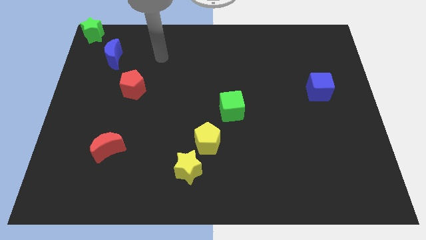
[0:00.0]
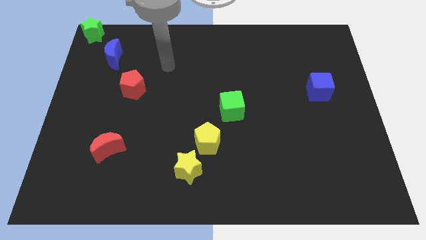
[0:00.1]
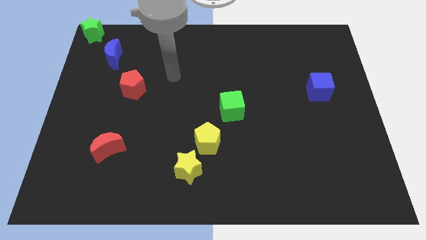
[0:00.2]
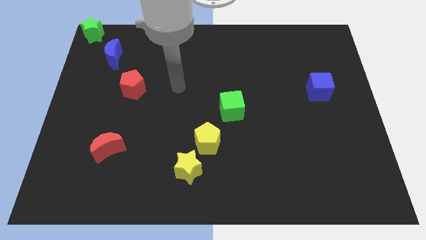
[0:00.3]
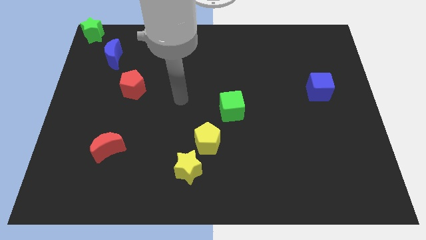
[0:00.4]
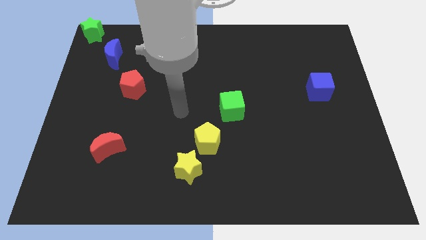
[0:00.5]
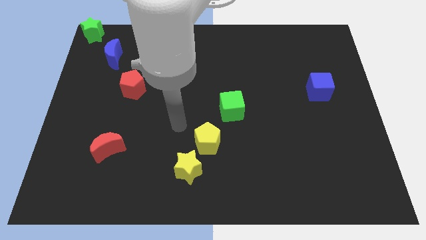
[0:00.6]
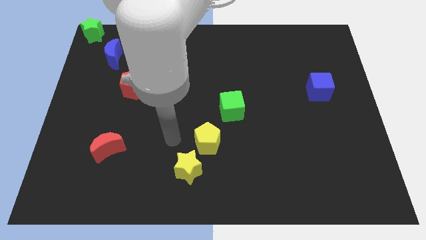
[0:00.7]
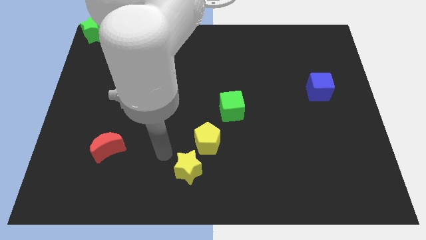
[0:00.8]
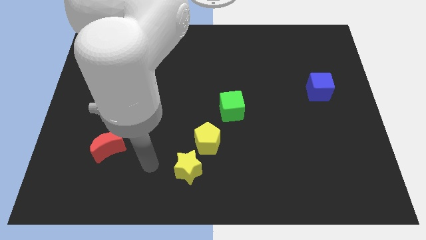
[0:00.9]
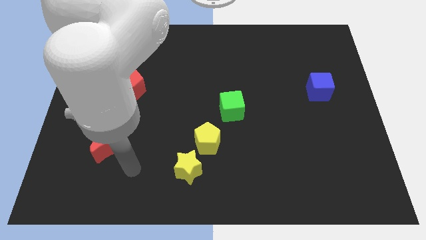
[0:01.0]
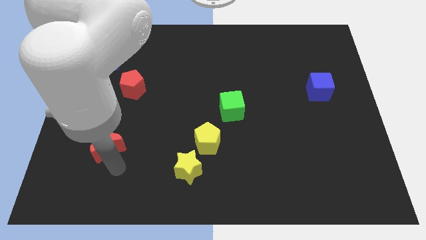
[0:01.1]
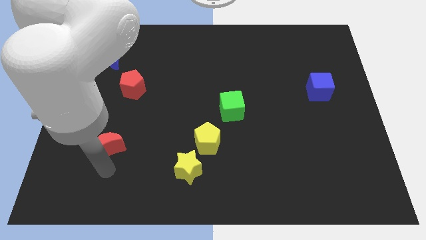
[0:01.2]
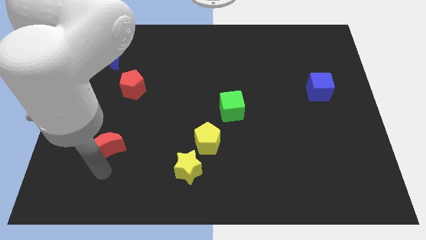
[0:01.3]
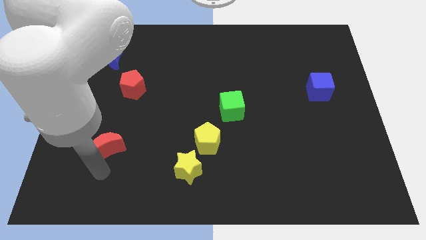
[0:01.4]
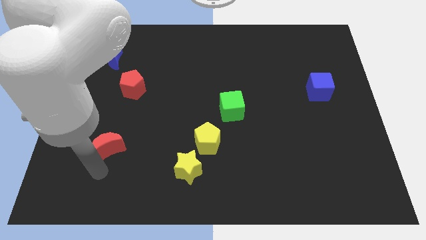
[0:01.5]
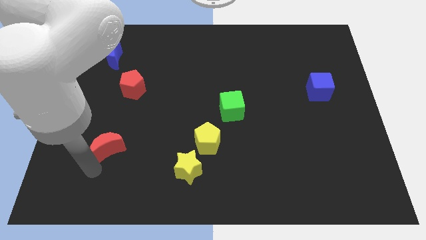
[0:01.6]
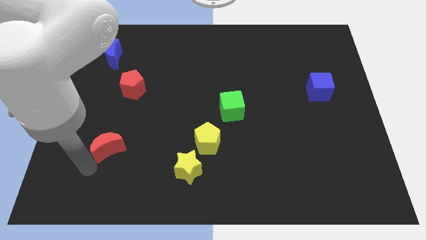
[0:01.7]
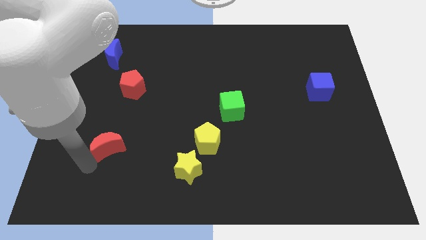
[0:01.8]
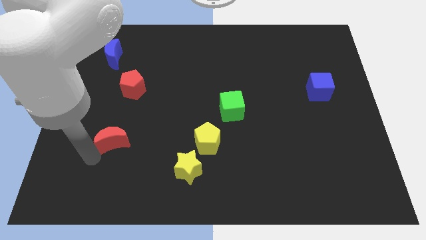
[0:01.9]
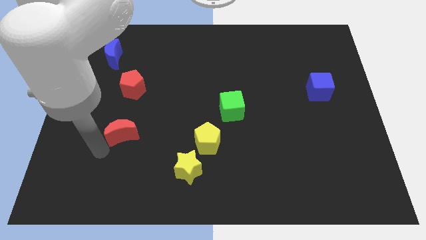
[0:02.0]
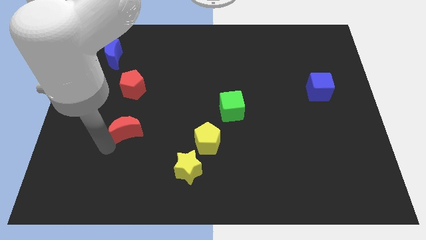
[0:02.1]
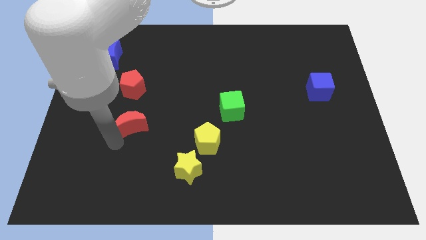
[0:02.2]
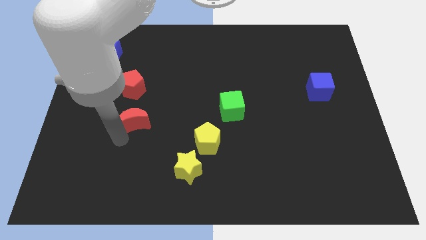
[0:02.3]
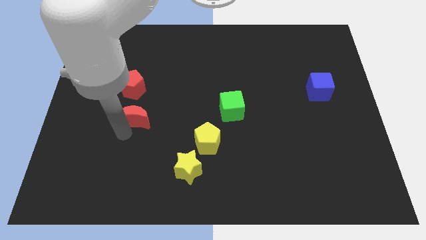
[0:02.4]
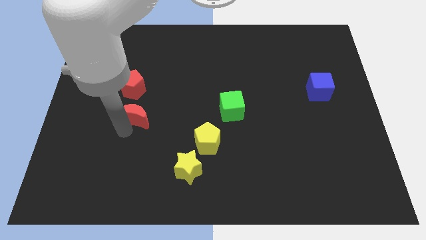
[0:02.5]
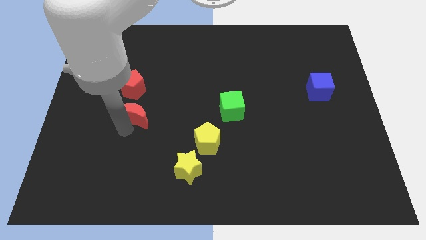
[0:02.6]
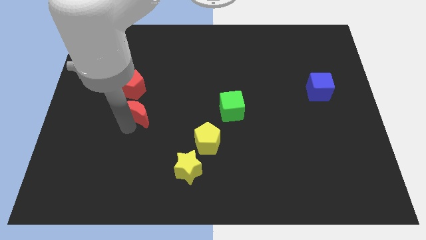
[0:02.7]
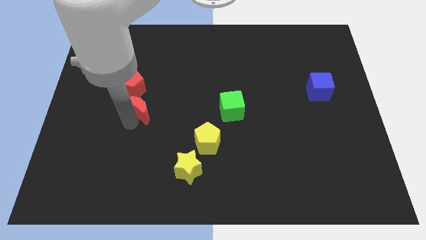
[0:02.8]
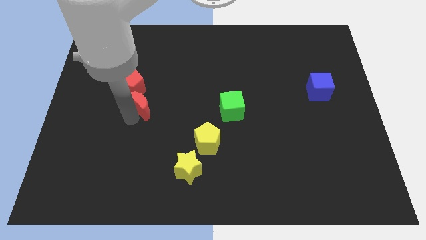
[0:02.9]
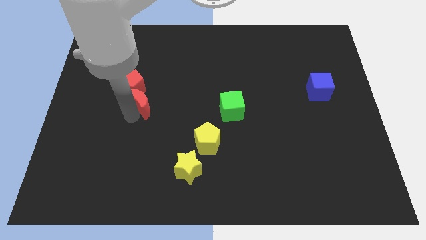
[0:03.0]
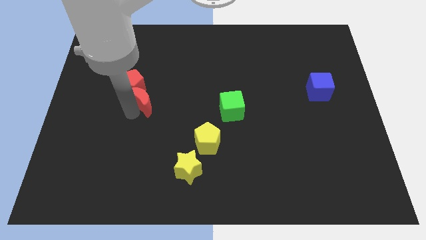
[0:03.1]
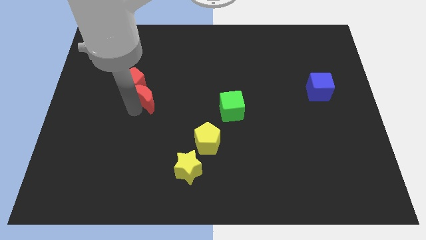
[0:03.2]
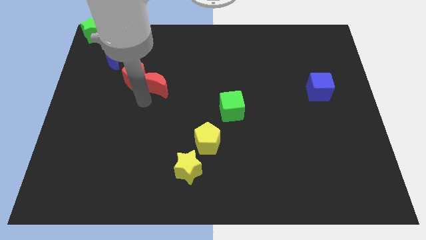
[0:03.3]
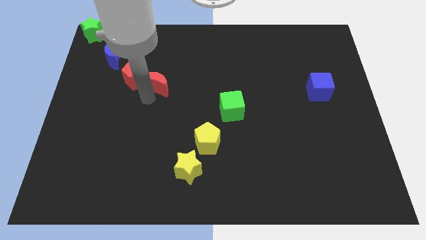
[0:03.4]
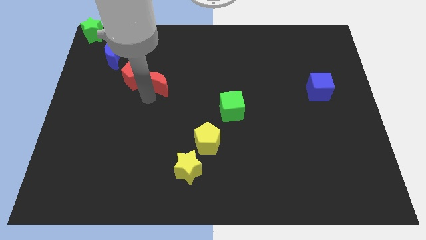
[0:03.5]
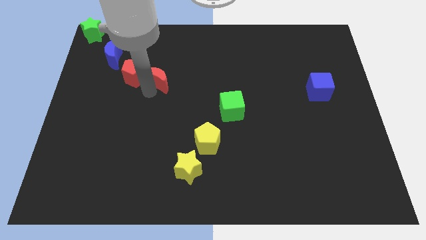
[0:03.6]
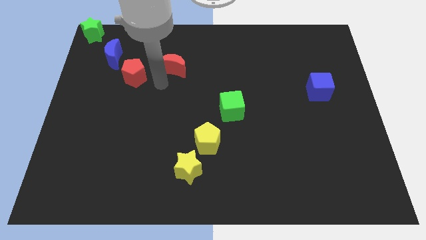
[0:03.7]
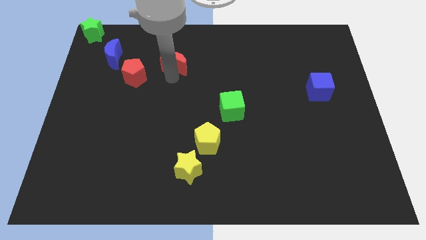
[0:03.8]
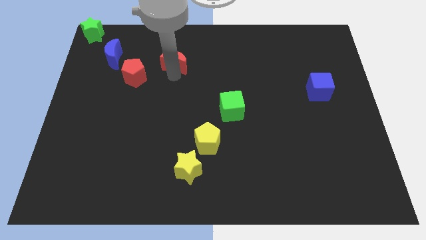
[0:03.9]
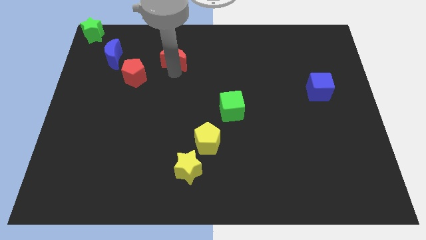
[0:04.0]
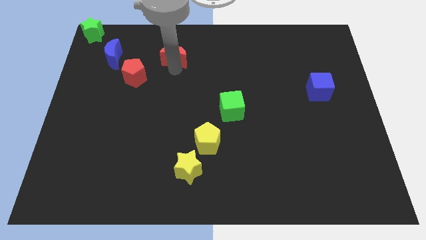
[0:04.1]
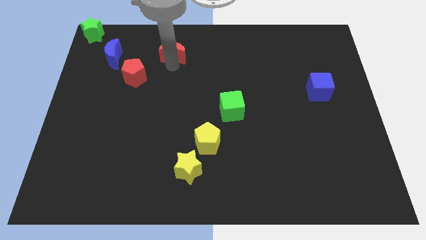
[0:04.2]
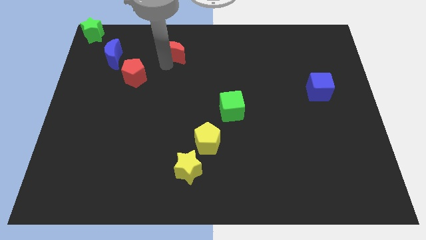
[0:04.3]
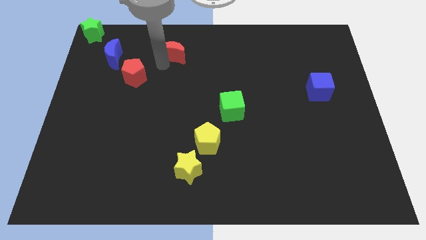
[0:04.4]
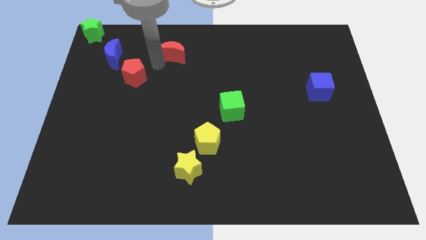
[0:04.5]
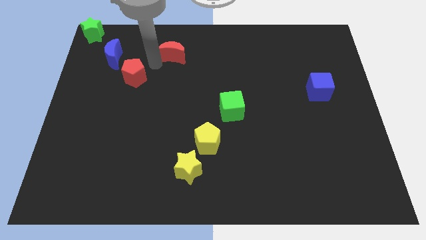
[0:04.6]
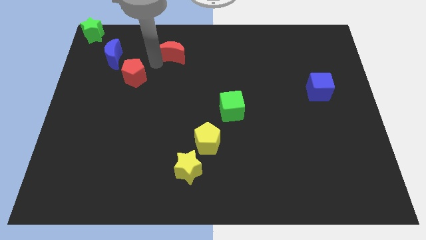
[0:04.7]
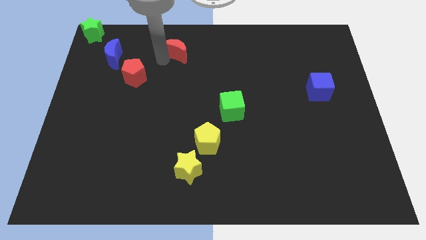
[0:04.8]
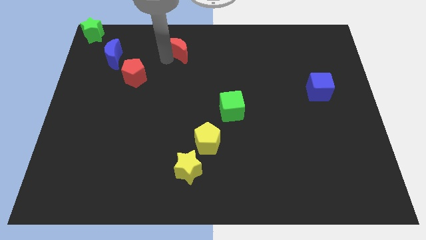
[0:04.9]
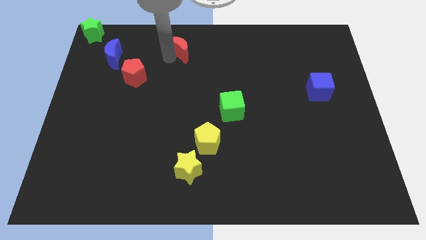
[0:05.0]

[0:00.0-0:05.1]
push red crescent to the top of the board

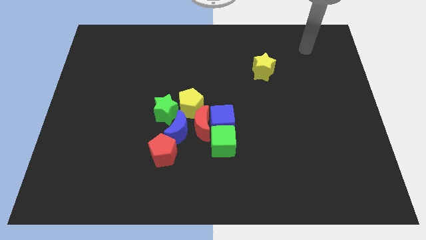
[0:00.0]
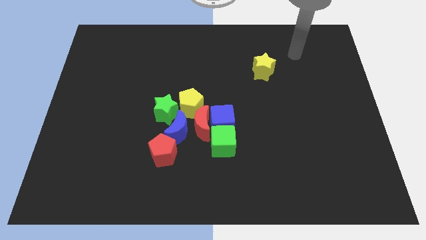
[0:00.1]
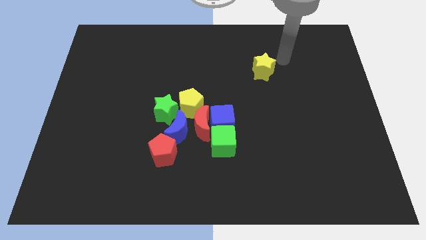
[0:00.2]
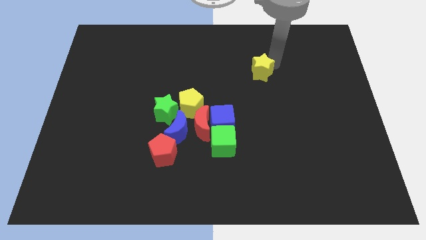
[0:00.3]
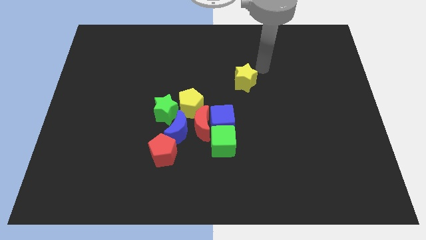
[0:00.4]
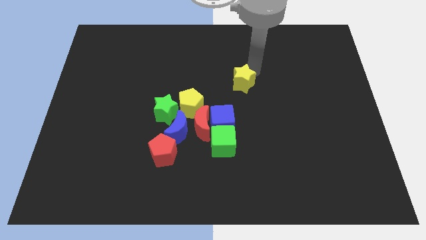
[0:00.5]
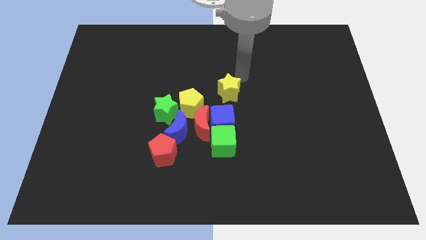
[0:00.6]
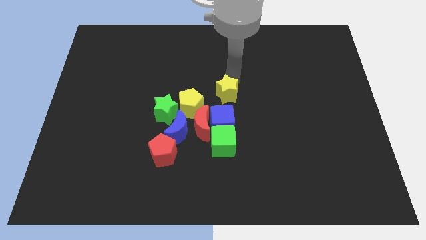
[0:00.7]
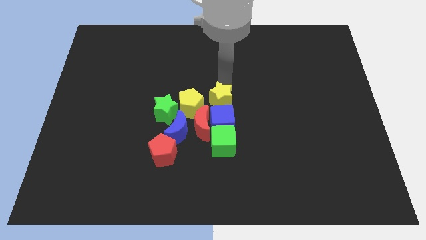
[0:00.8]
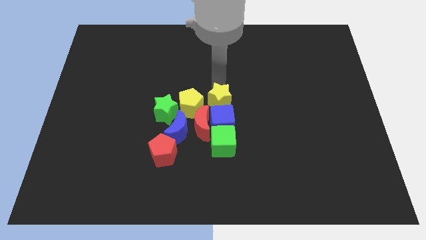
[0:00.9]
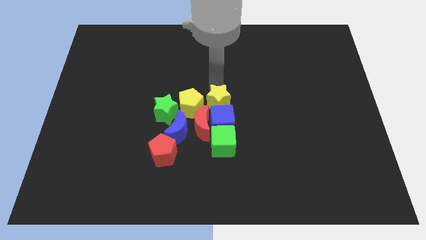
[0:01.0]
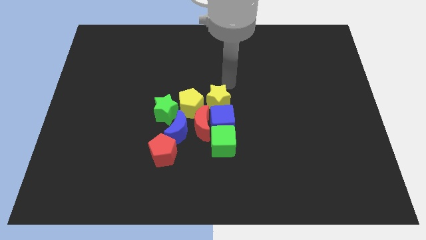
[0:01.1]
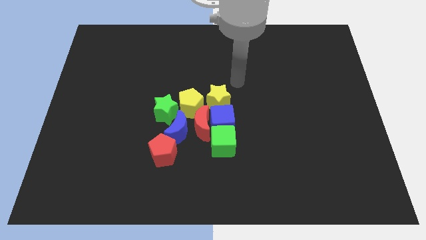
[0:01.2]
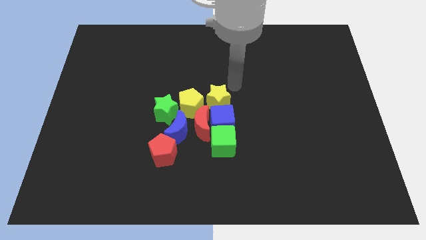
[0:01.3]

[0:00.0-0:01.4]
place the yellow star on top of blue cube

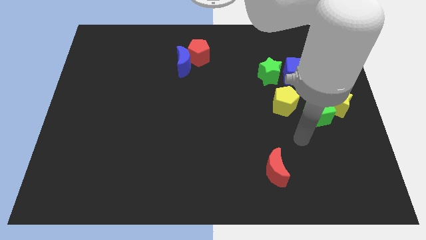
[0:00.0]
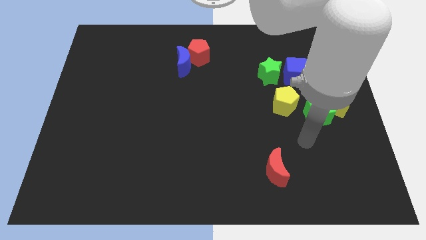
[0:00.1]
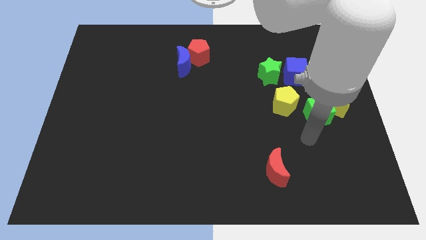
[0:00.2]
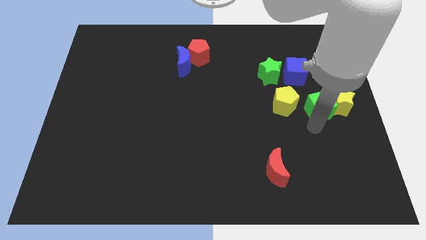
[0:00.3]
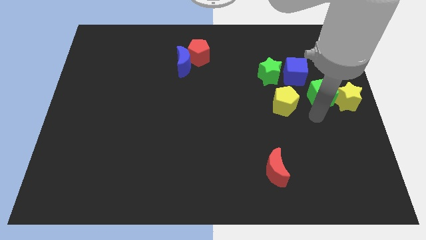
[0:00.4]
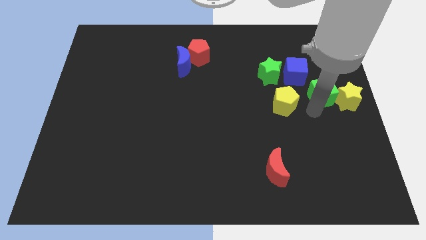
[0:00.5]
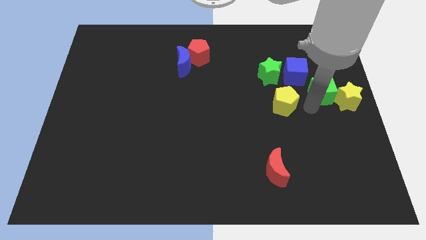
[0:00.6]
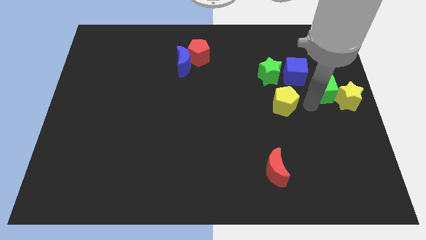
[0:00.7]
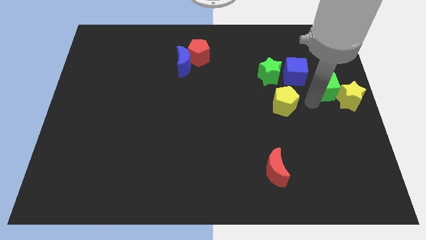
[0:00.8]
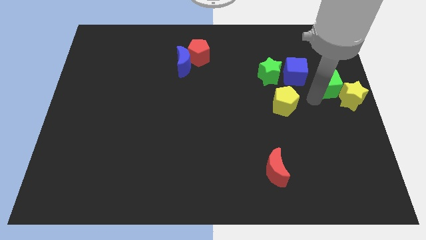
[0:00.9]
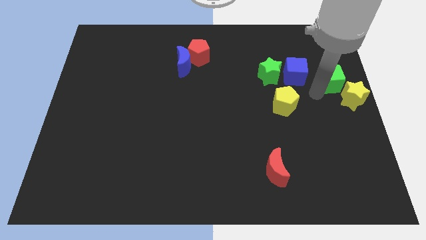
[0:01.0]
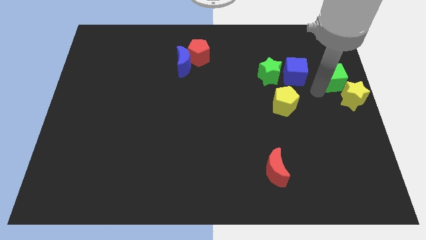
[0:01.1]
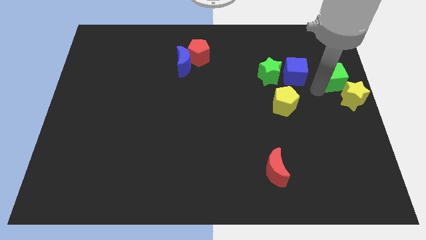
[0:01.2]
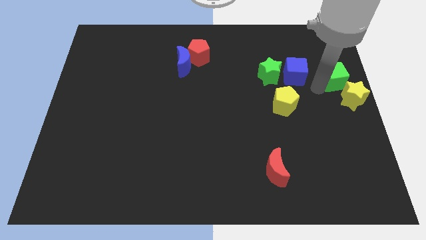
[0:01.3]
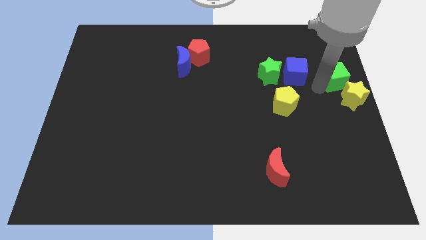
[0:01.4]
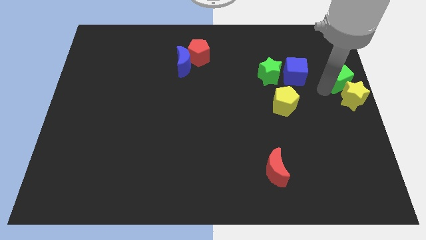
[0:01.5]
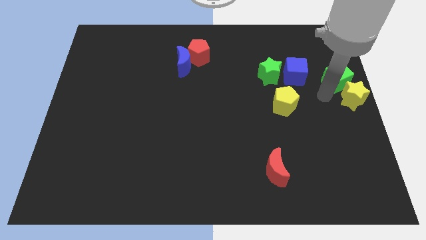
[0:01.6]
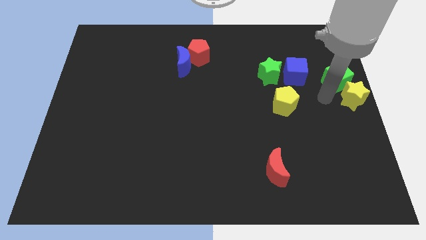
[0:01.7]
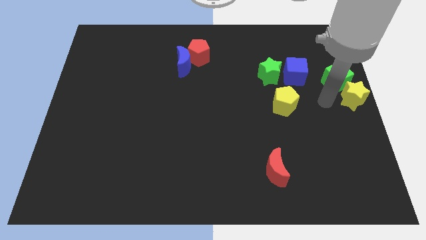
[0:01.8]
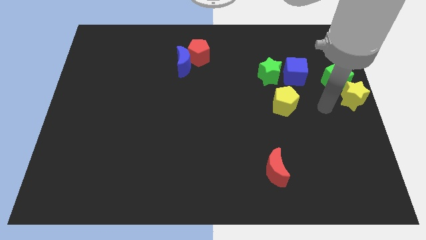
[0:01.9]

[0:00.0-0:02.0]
put the green cube diagonally on the top side of the yellow star

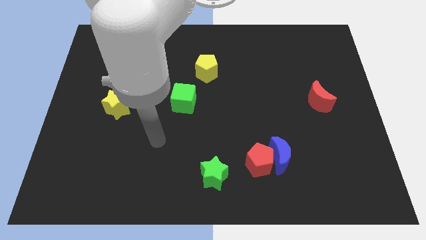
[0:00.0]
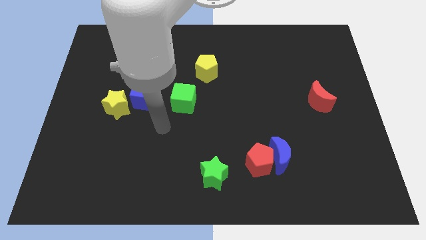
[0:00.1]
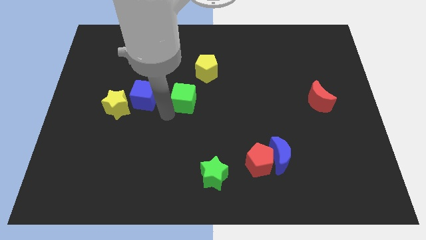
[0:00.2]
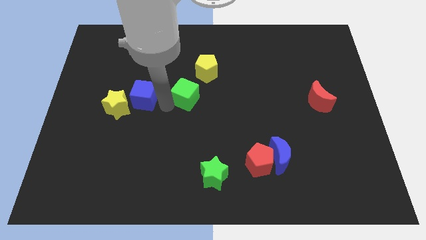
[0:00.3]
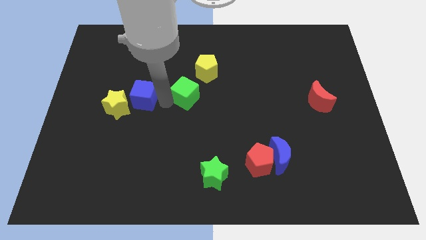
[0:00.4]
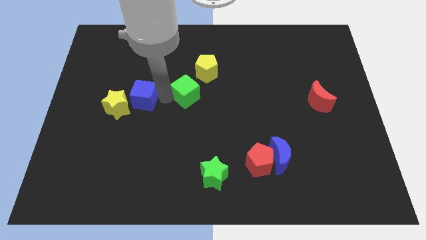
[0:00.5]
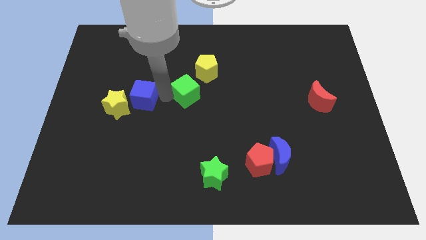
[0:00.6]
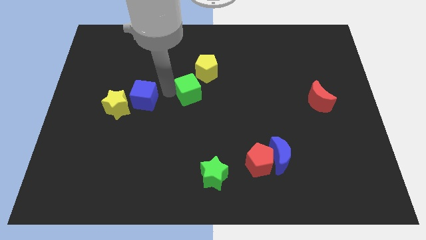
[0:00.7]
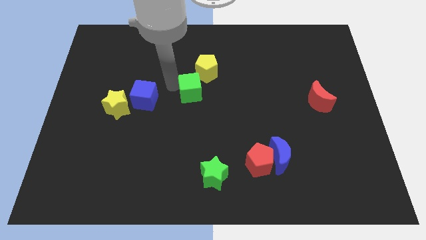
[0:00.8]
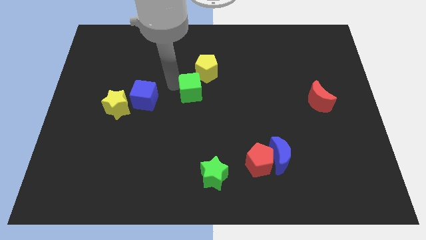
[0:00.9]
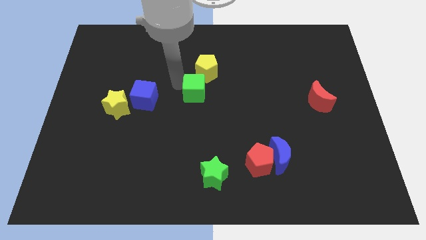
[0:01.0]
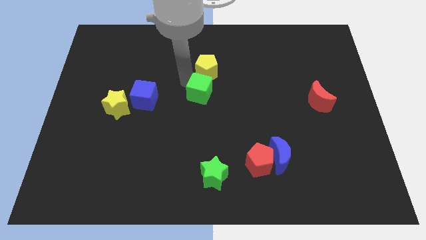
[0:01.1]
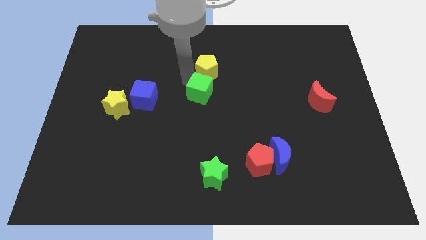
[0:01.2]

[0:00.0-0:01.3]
place green cube to the bottom of yellow pentagon
